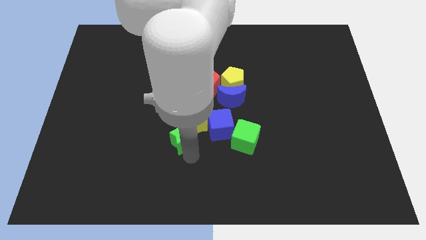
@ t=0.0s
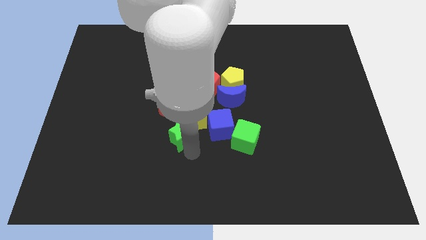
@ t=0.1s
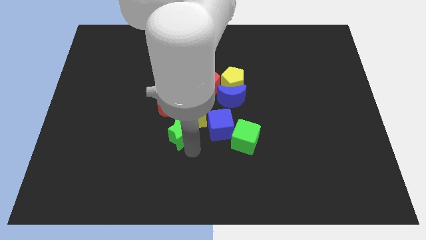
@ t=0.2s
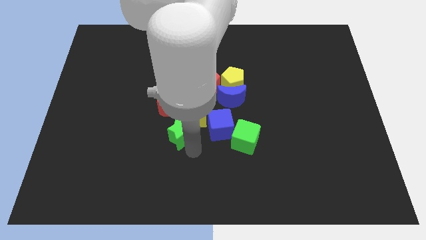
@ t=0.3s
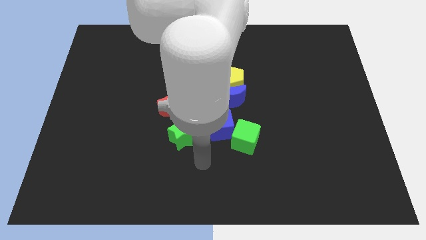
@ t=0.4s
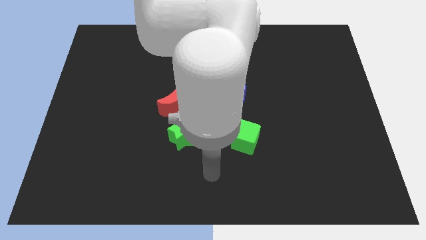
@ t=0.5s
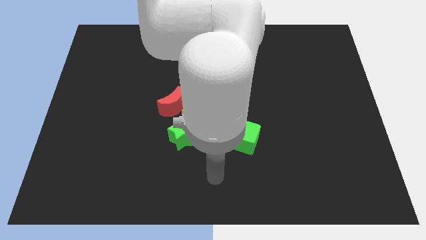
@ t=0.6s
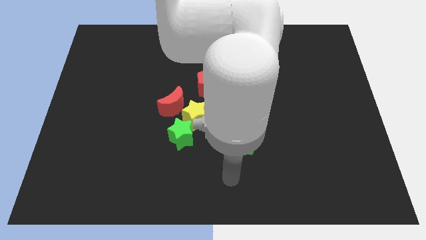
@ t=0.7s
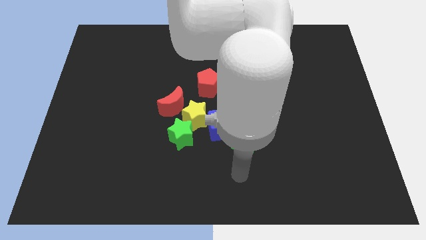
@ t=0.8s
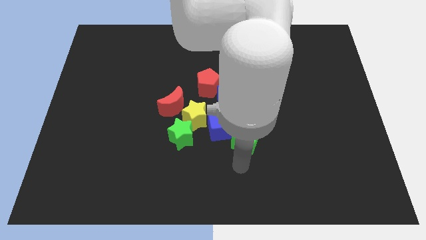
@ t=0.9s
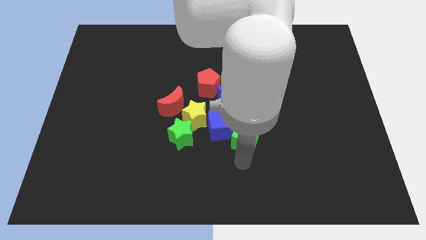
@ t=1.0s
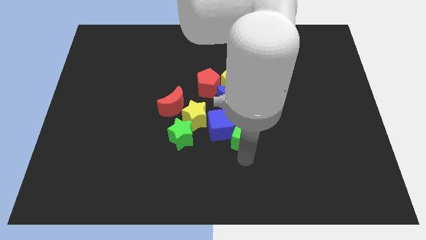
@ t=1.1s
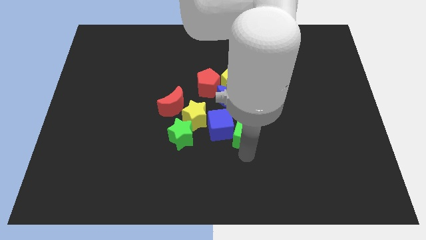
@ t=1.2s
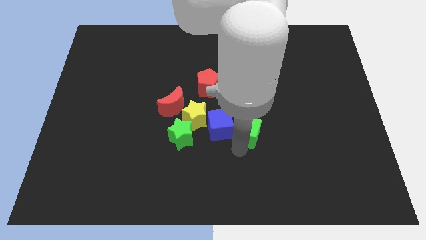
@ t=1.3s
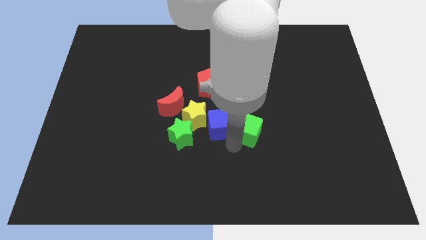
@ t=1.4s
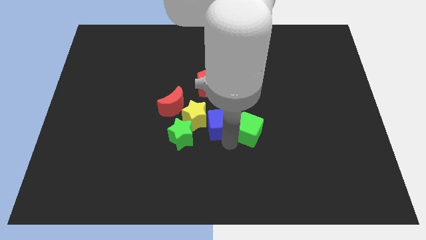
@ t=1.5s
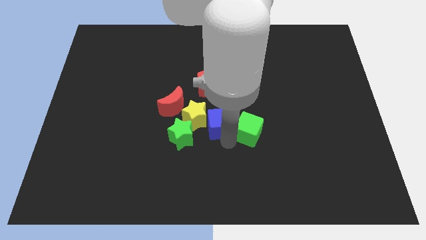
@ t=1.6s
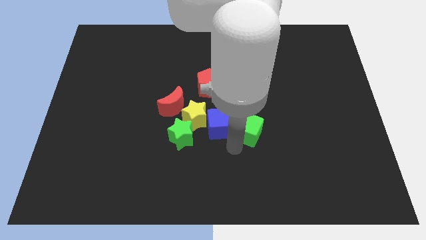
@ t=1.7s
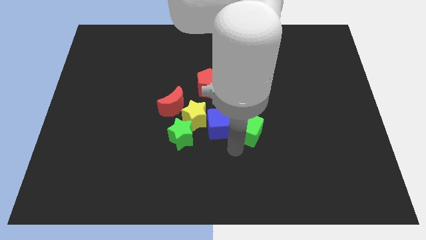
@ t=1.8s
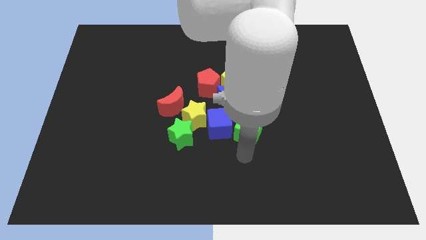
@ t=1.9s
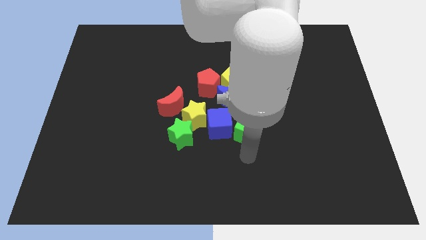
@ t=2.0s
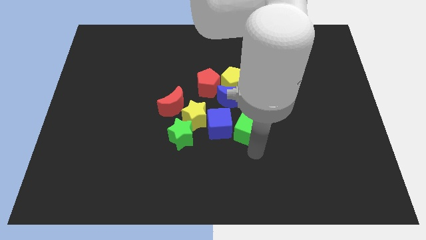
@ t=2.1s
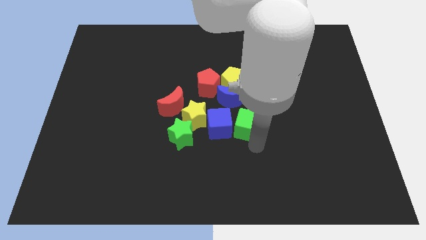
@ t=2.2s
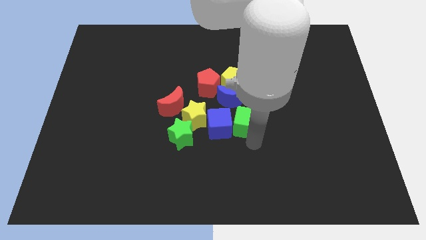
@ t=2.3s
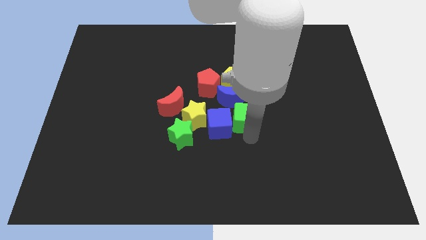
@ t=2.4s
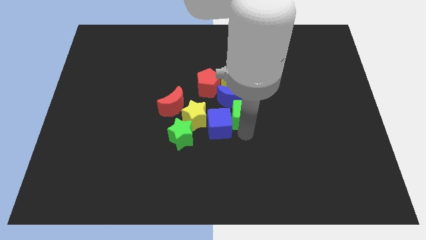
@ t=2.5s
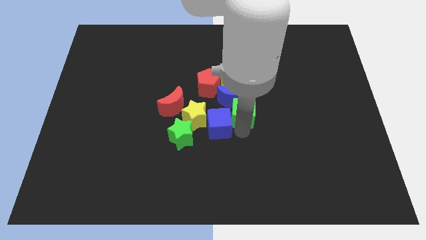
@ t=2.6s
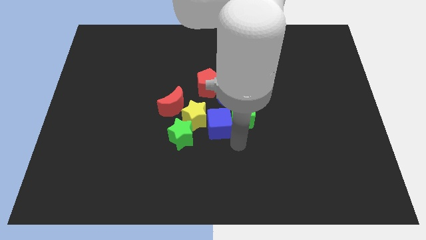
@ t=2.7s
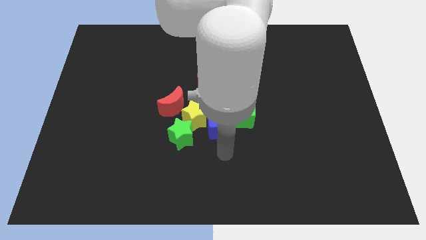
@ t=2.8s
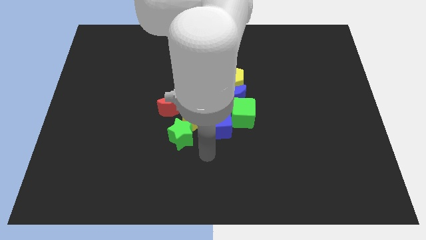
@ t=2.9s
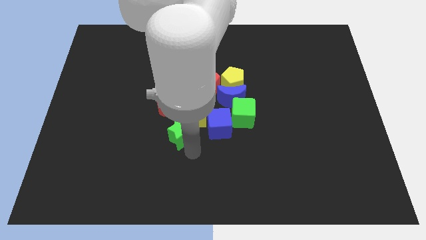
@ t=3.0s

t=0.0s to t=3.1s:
move the green cube close to the bottom of the blue moon

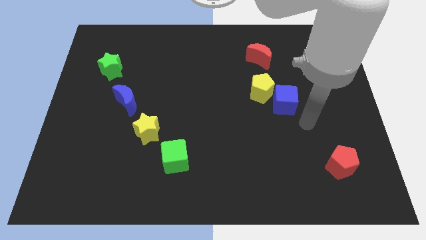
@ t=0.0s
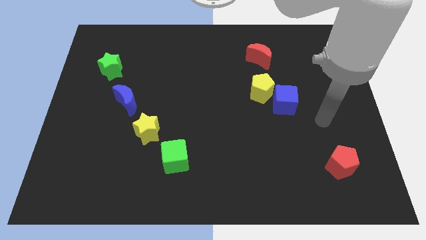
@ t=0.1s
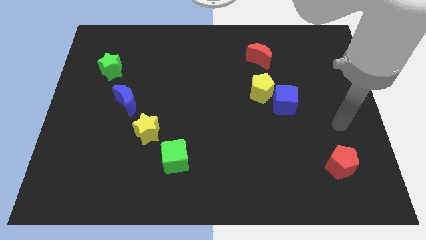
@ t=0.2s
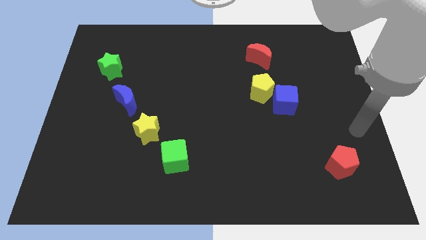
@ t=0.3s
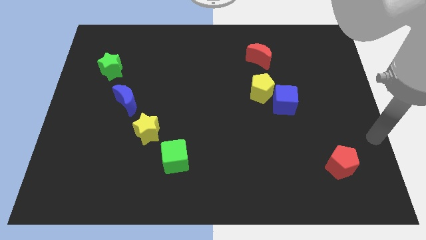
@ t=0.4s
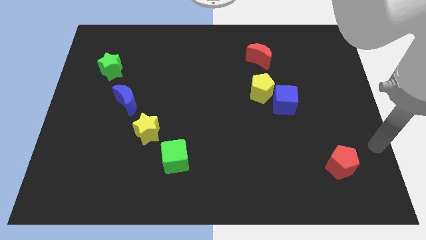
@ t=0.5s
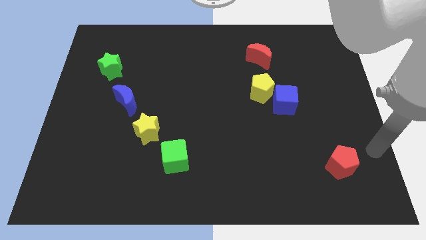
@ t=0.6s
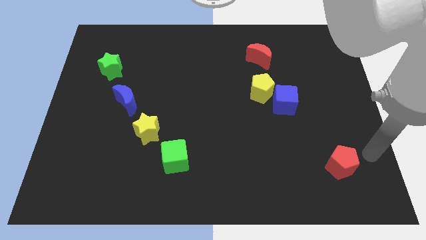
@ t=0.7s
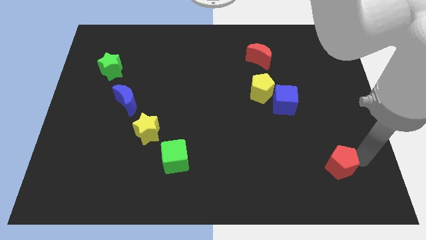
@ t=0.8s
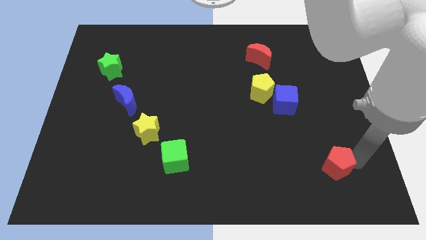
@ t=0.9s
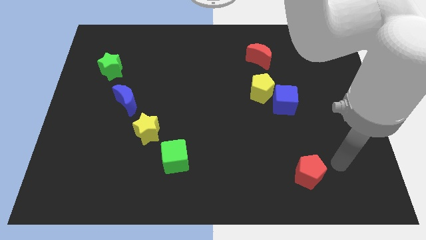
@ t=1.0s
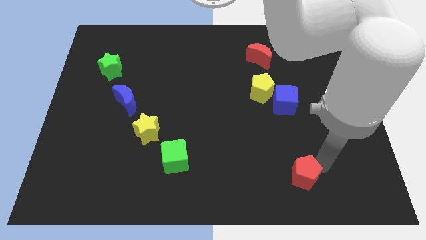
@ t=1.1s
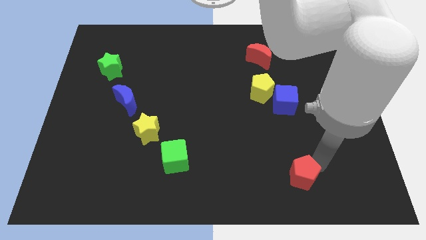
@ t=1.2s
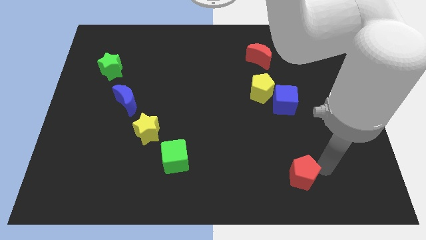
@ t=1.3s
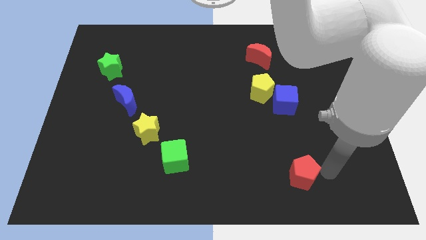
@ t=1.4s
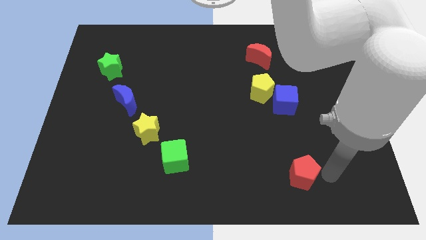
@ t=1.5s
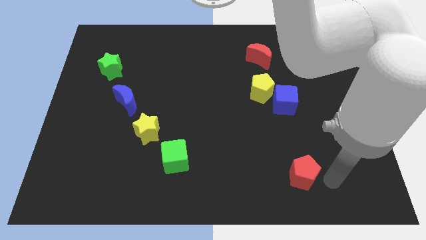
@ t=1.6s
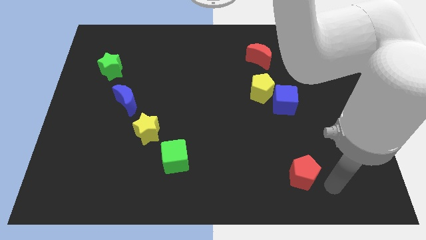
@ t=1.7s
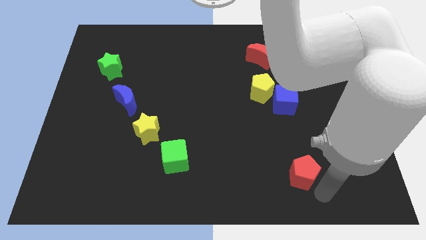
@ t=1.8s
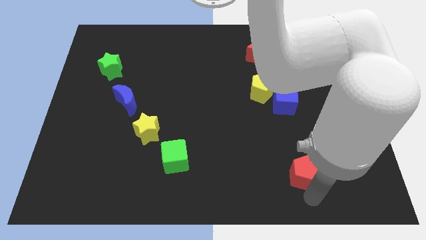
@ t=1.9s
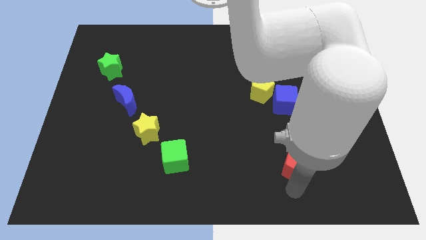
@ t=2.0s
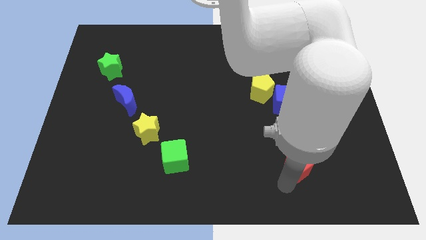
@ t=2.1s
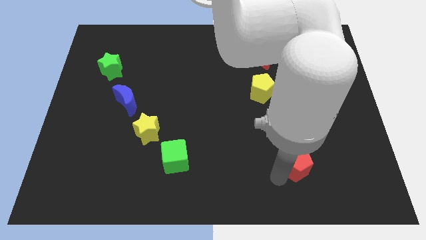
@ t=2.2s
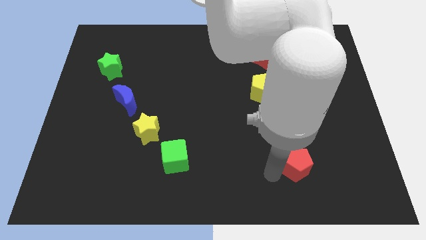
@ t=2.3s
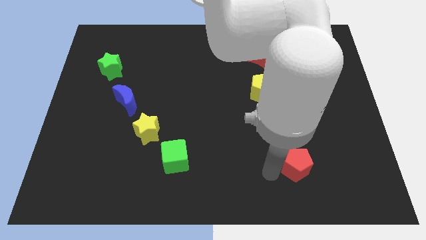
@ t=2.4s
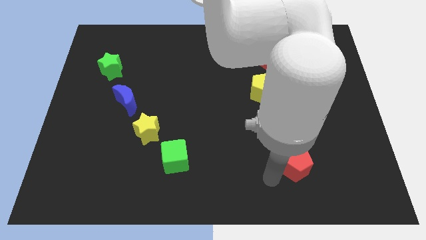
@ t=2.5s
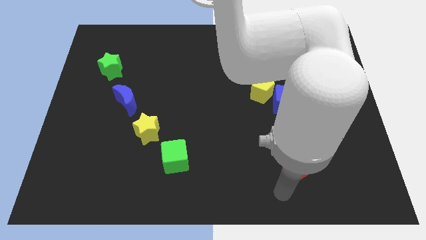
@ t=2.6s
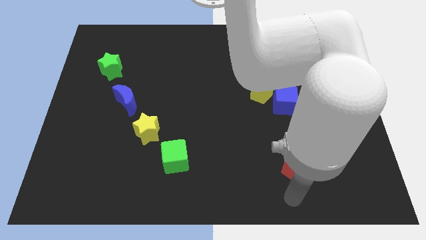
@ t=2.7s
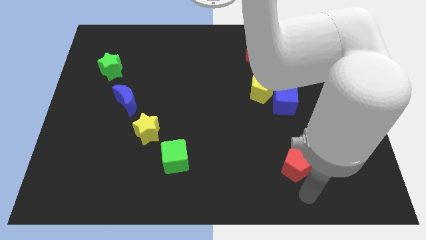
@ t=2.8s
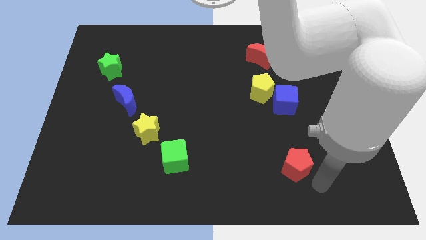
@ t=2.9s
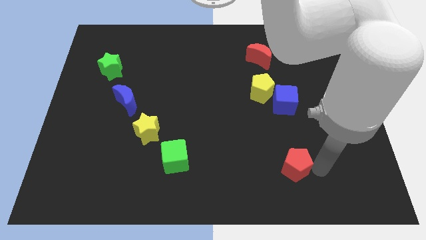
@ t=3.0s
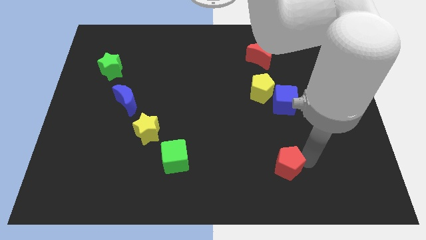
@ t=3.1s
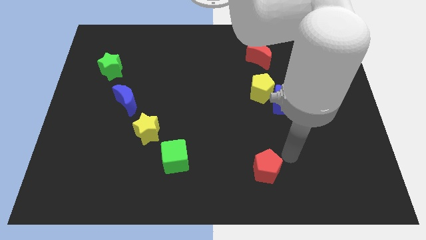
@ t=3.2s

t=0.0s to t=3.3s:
put the red pentagon vertically below the yellow pentagon

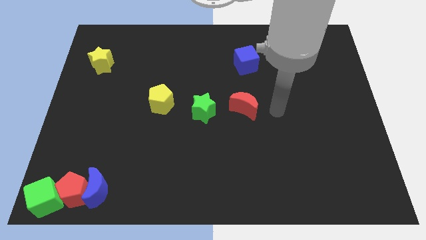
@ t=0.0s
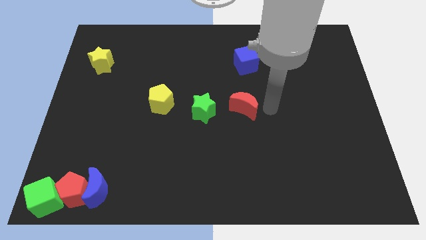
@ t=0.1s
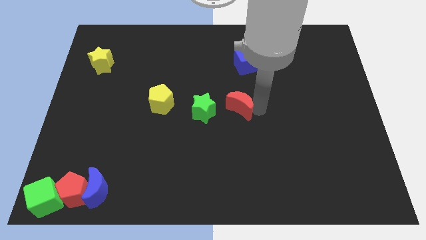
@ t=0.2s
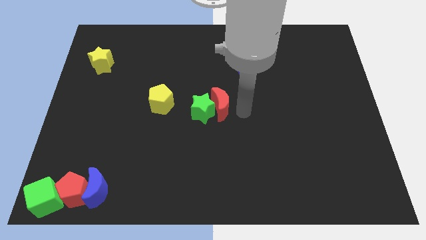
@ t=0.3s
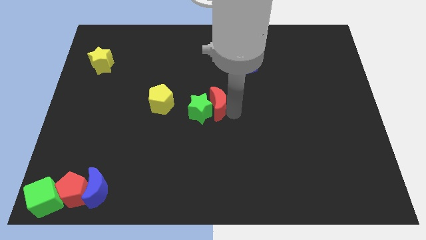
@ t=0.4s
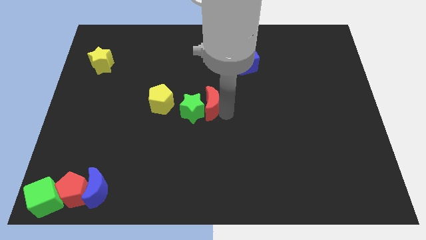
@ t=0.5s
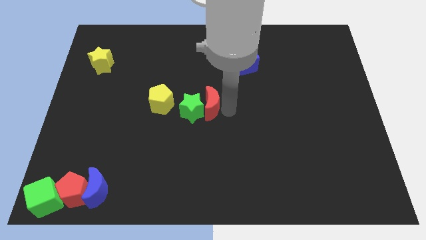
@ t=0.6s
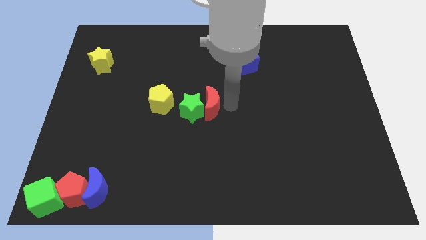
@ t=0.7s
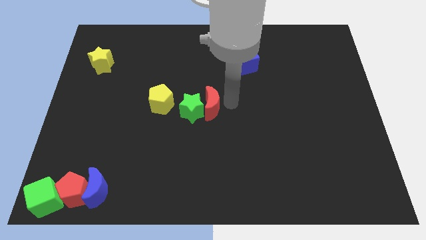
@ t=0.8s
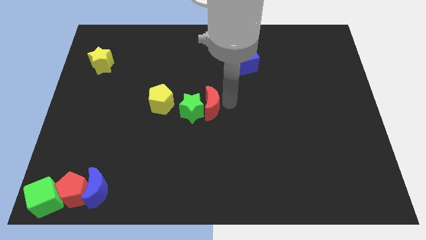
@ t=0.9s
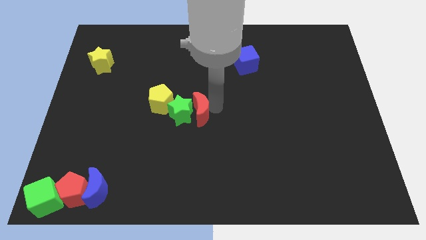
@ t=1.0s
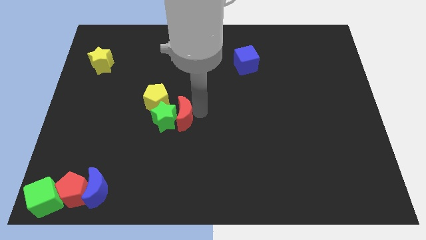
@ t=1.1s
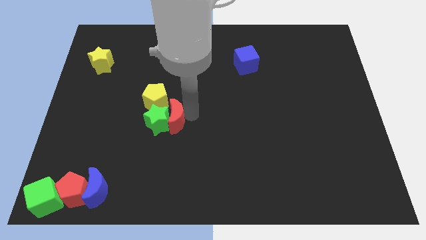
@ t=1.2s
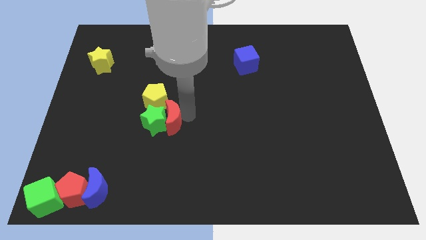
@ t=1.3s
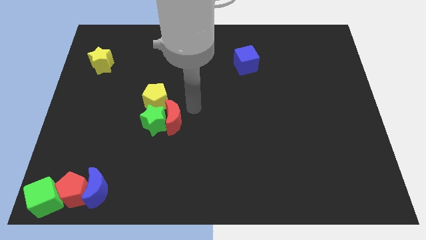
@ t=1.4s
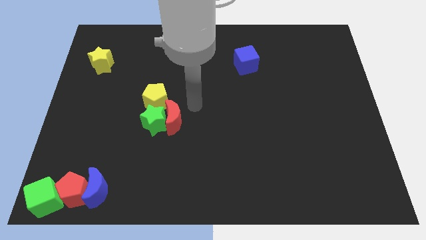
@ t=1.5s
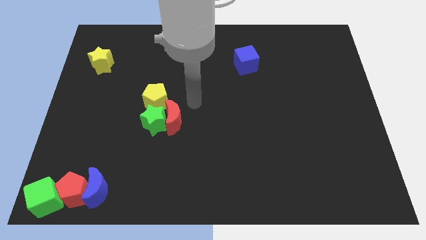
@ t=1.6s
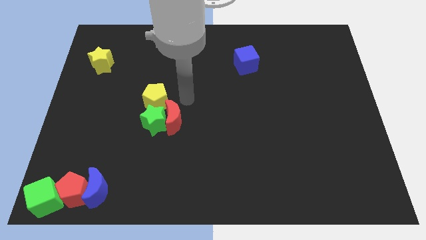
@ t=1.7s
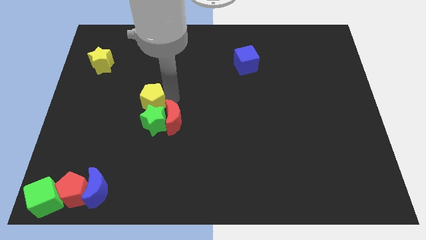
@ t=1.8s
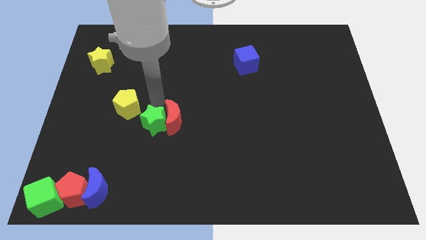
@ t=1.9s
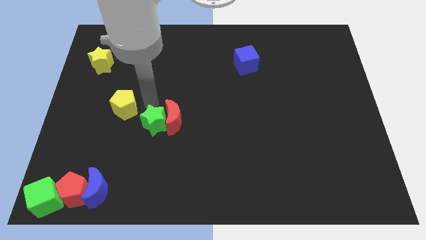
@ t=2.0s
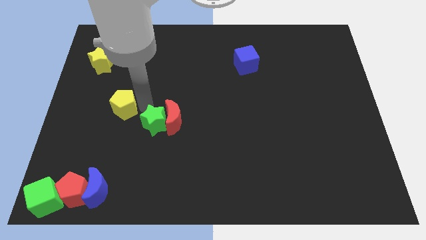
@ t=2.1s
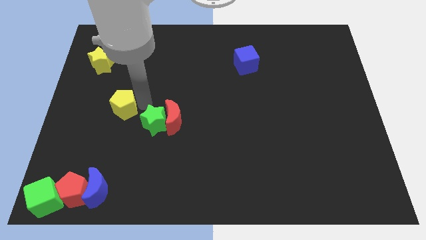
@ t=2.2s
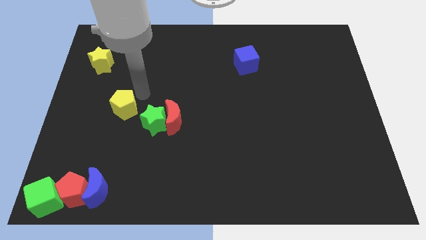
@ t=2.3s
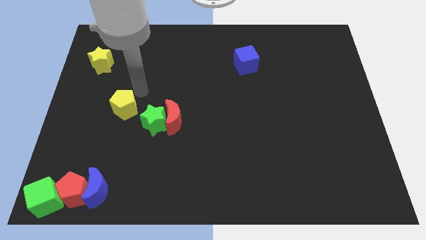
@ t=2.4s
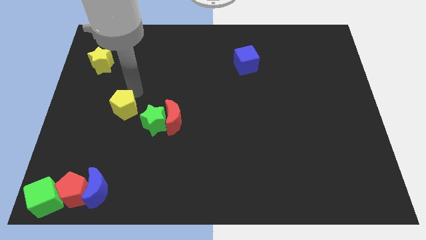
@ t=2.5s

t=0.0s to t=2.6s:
push the green star towards the left side of the board with the help of the red crescent
